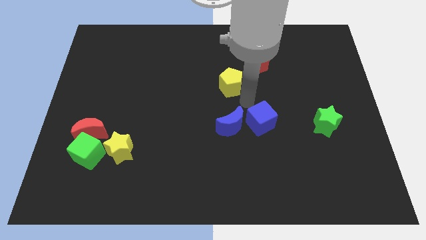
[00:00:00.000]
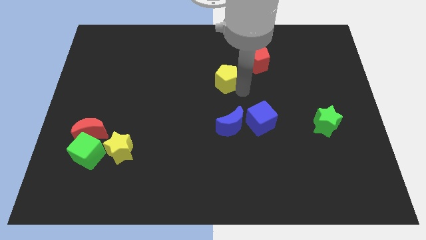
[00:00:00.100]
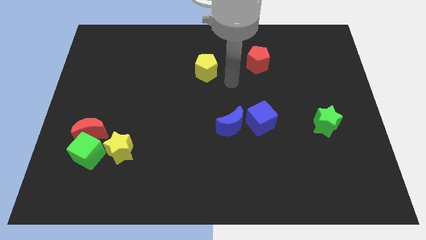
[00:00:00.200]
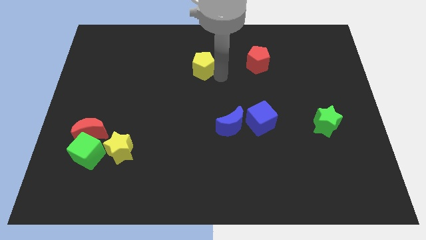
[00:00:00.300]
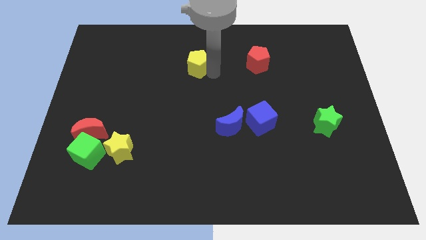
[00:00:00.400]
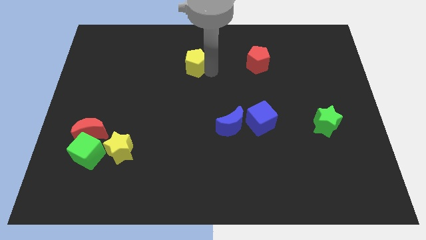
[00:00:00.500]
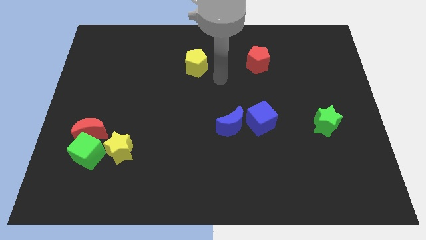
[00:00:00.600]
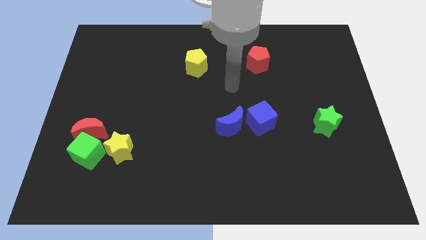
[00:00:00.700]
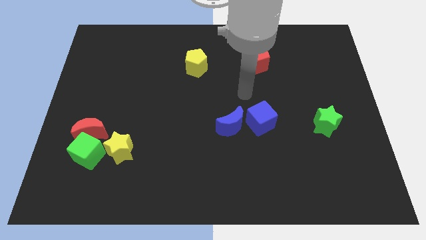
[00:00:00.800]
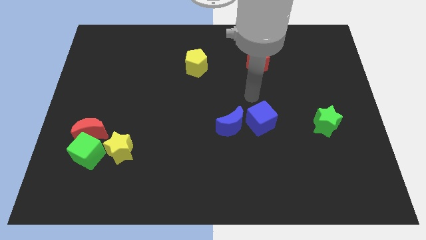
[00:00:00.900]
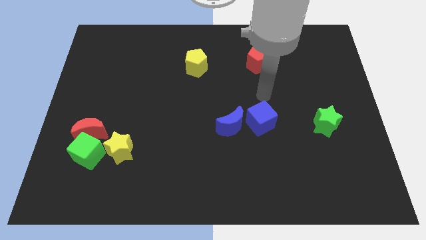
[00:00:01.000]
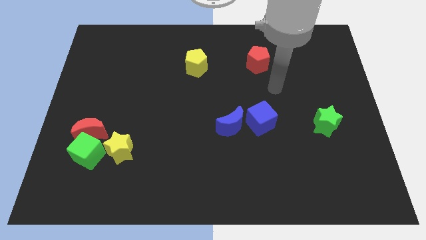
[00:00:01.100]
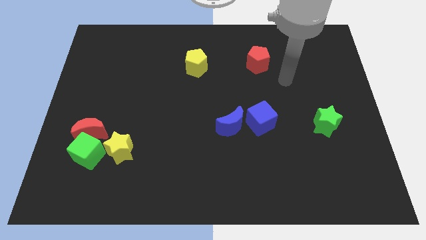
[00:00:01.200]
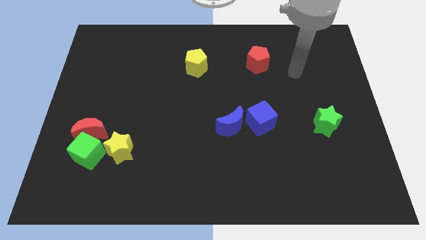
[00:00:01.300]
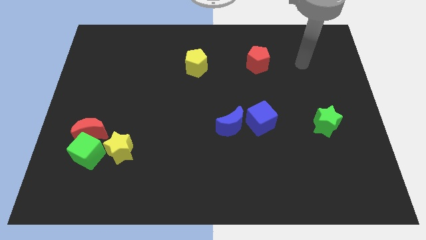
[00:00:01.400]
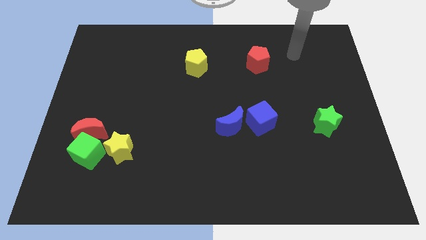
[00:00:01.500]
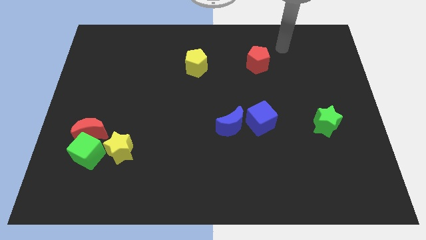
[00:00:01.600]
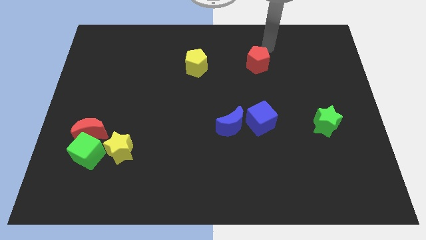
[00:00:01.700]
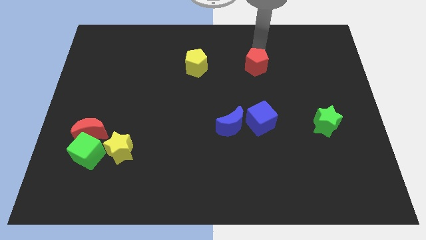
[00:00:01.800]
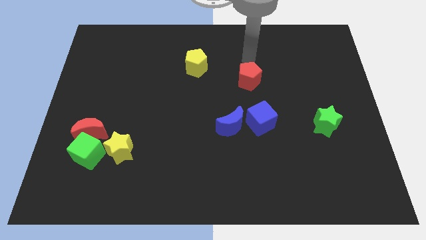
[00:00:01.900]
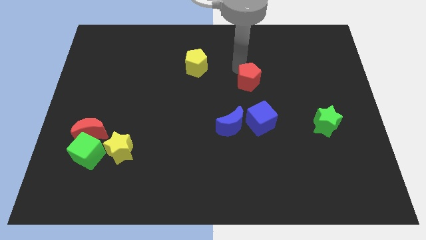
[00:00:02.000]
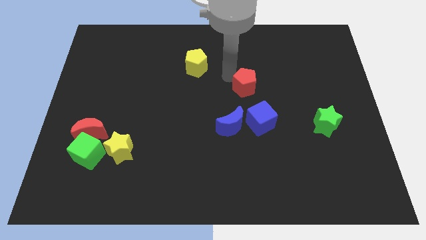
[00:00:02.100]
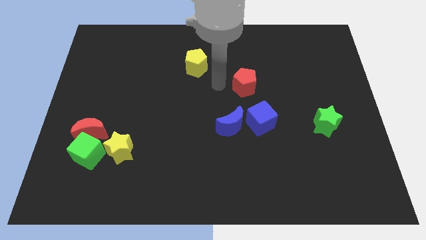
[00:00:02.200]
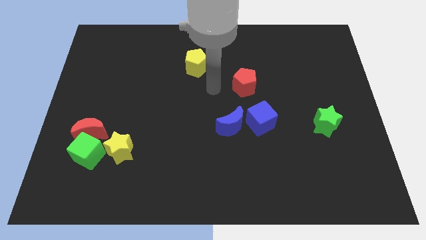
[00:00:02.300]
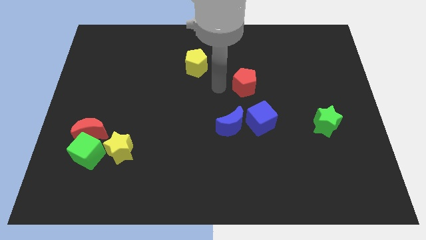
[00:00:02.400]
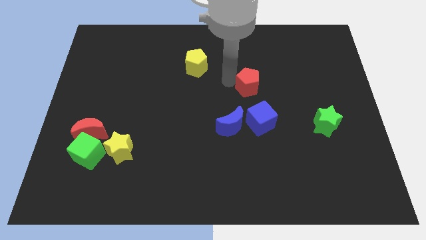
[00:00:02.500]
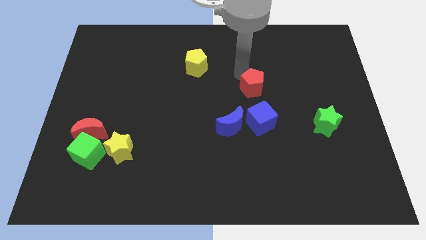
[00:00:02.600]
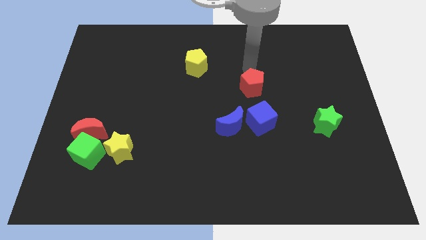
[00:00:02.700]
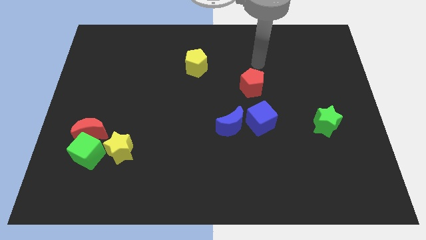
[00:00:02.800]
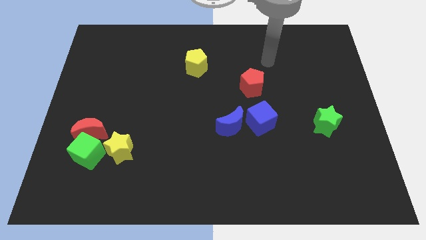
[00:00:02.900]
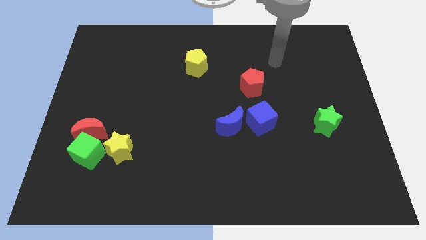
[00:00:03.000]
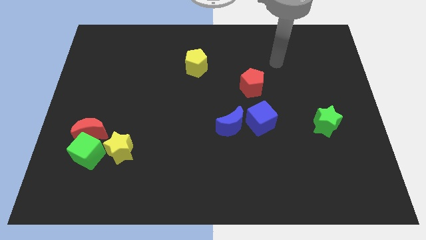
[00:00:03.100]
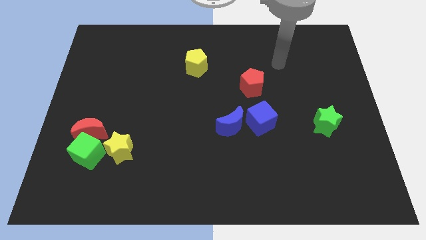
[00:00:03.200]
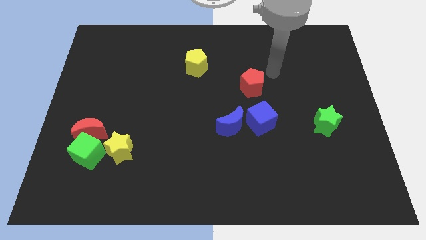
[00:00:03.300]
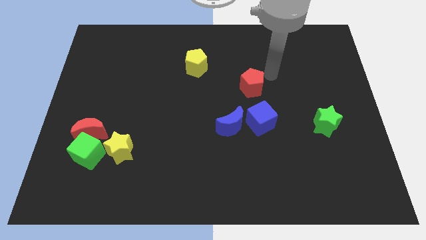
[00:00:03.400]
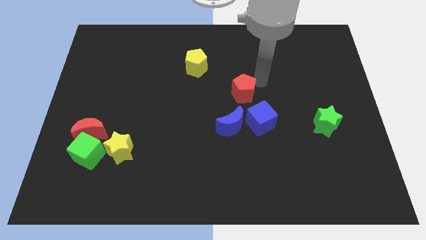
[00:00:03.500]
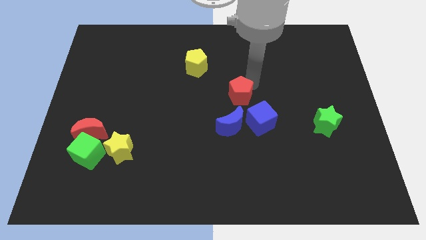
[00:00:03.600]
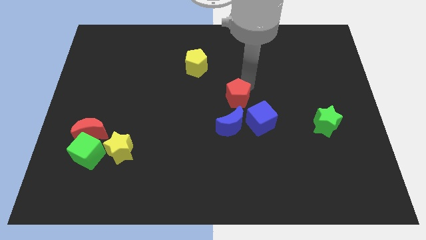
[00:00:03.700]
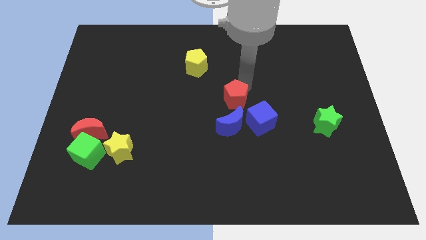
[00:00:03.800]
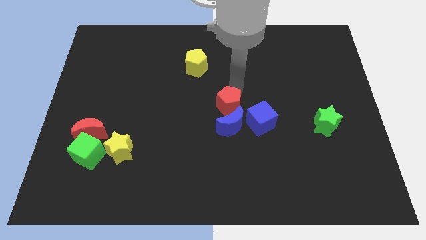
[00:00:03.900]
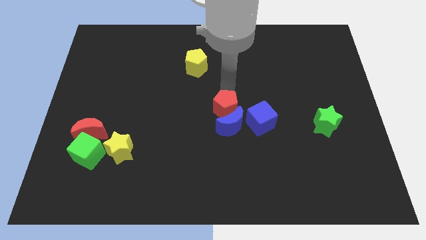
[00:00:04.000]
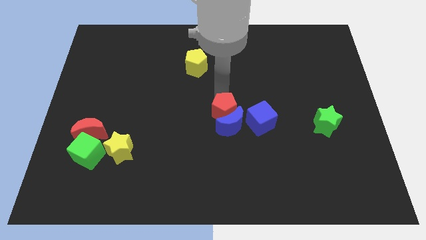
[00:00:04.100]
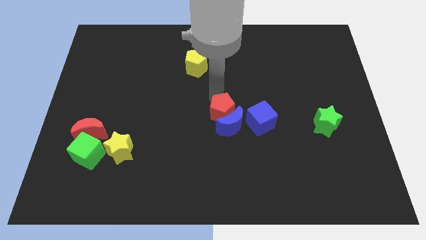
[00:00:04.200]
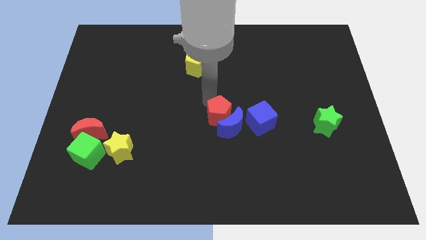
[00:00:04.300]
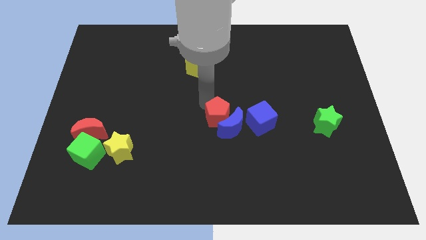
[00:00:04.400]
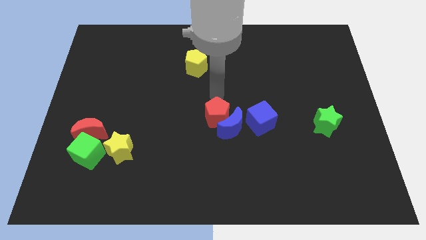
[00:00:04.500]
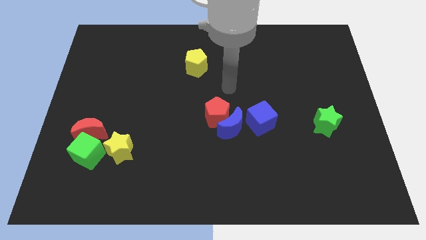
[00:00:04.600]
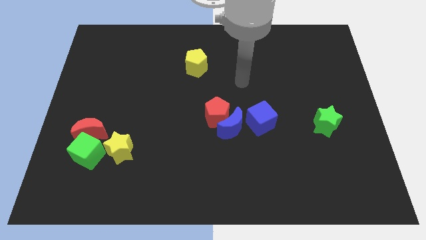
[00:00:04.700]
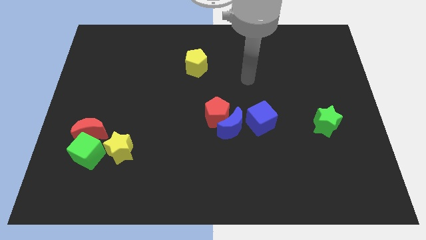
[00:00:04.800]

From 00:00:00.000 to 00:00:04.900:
push the red pentagon into the blue moon

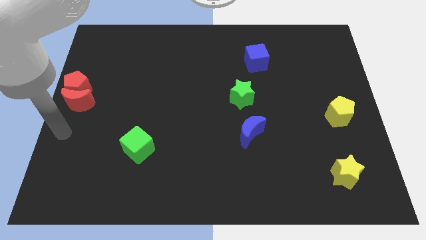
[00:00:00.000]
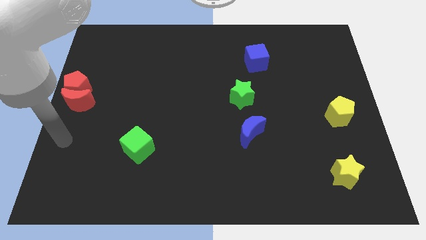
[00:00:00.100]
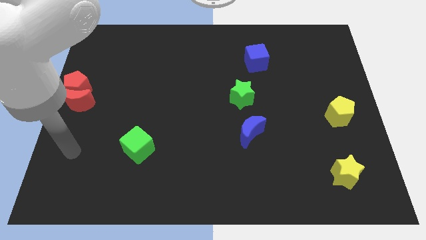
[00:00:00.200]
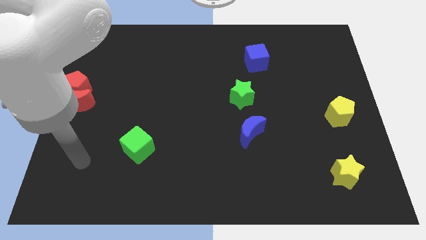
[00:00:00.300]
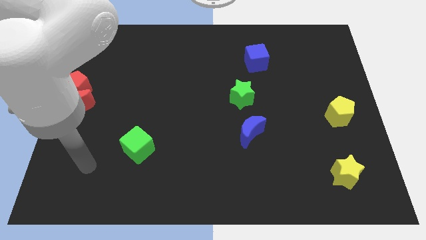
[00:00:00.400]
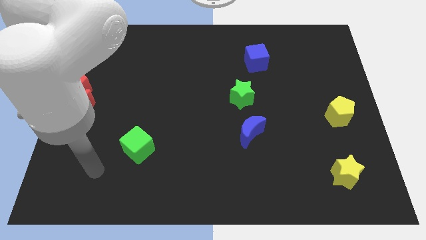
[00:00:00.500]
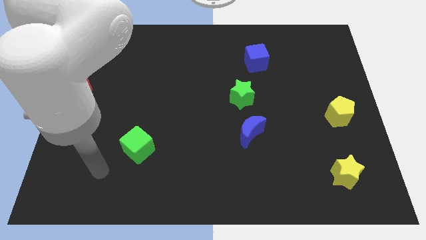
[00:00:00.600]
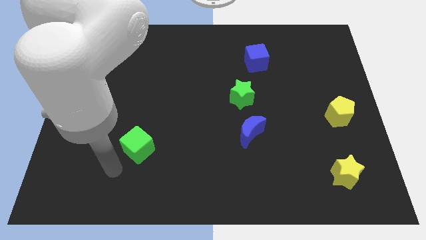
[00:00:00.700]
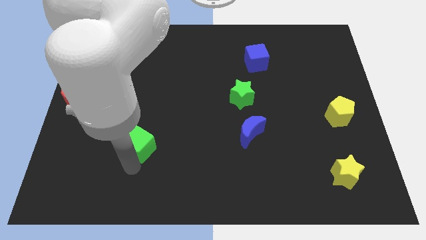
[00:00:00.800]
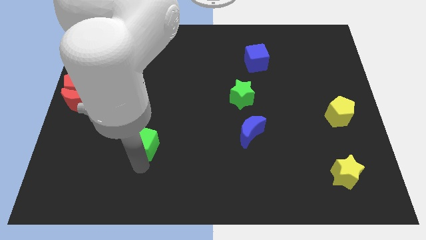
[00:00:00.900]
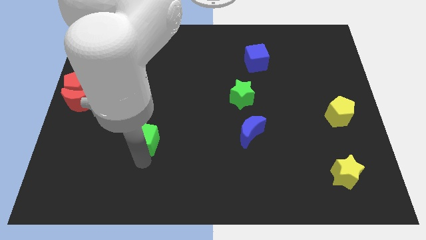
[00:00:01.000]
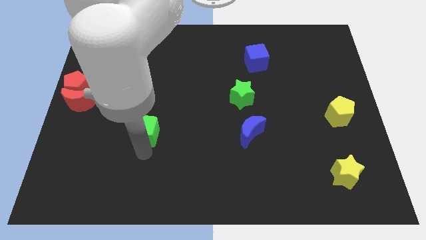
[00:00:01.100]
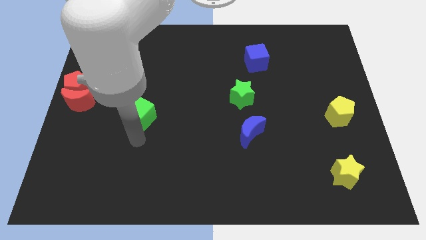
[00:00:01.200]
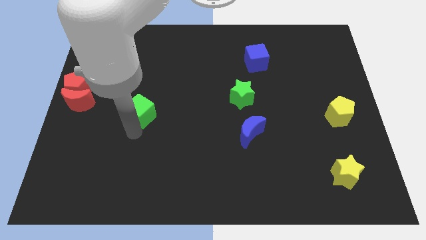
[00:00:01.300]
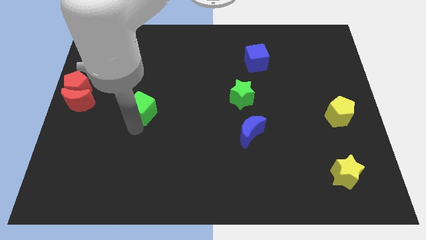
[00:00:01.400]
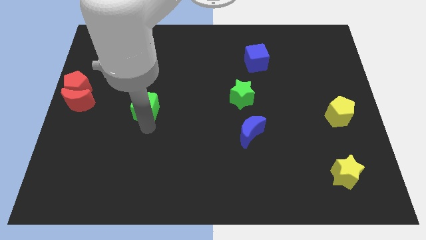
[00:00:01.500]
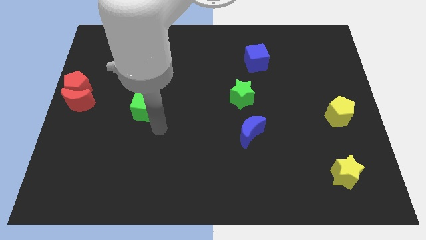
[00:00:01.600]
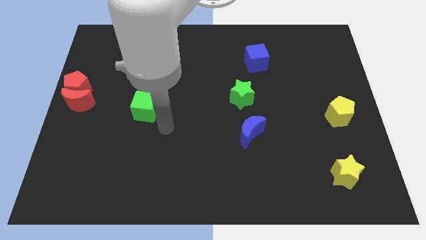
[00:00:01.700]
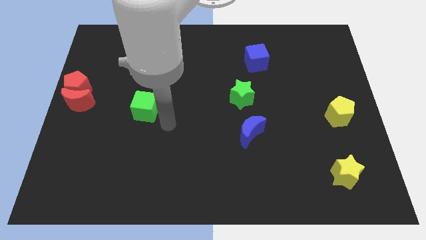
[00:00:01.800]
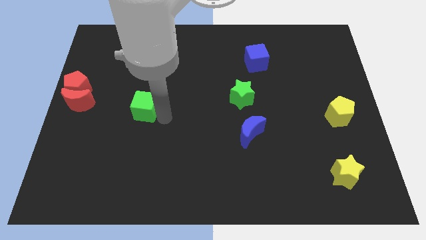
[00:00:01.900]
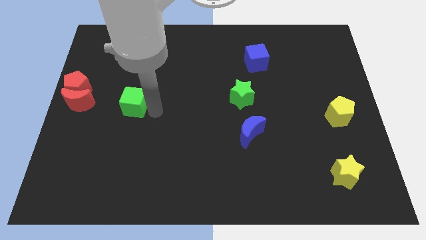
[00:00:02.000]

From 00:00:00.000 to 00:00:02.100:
place the green cube parallel to the red moon

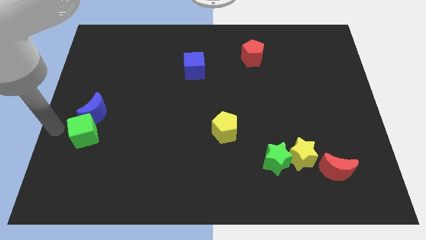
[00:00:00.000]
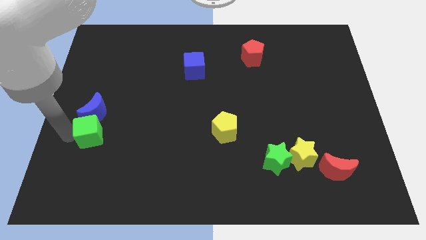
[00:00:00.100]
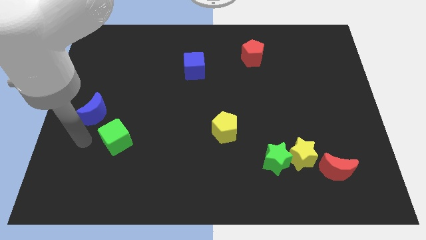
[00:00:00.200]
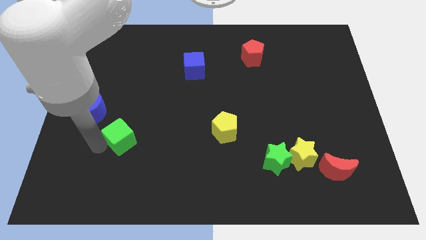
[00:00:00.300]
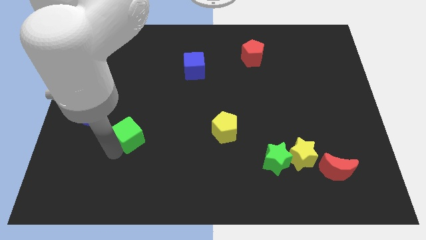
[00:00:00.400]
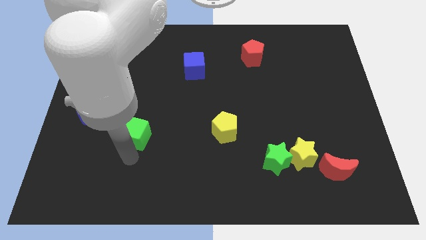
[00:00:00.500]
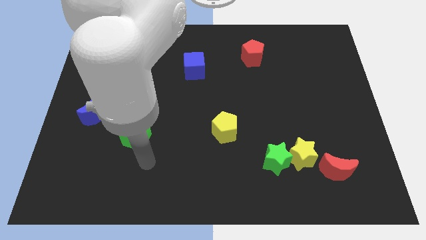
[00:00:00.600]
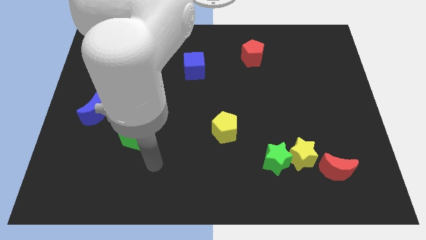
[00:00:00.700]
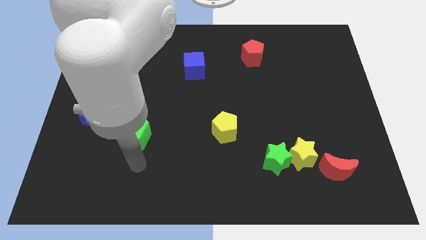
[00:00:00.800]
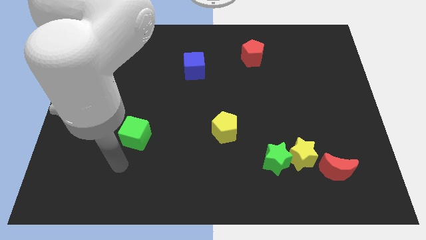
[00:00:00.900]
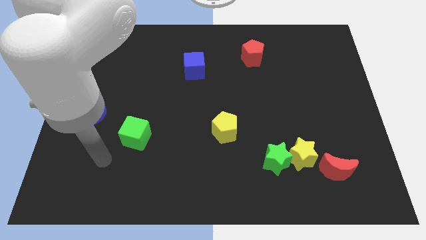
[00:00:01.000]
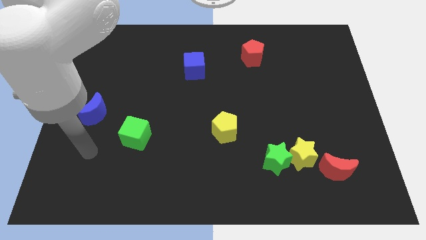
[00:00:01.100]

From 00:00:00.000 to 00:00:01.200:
push the green cube away from the blue moon

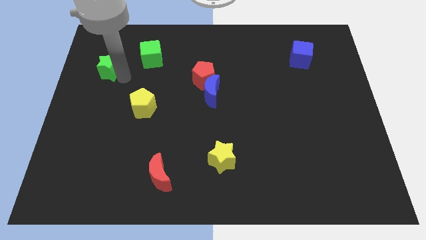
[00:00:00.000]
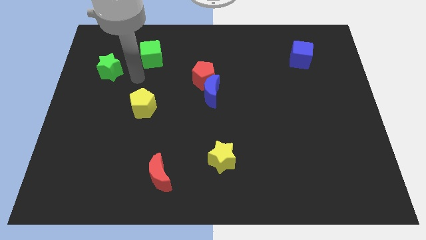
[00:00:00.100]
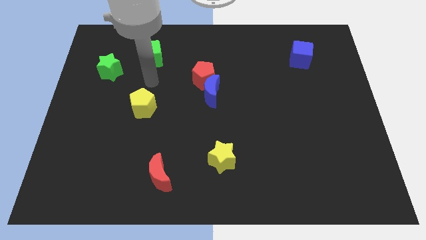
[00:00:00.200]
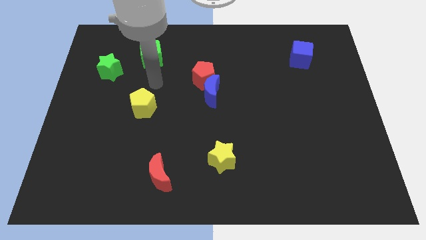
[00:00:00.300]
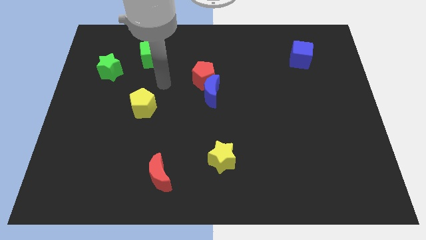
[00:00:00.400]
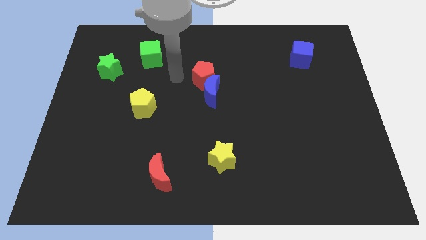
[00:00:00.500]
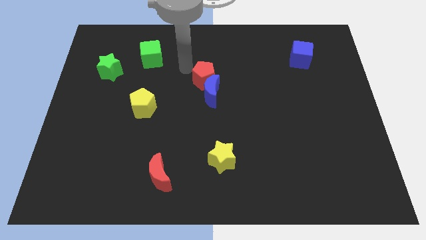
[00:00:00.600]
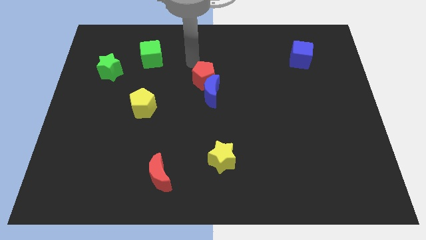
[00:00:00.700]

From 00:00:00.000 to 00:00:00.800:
move the arm away from the green star
